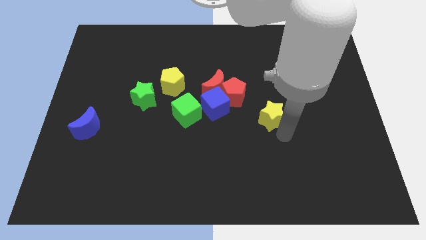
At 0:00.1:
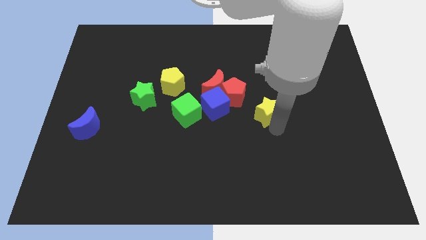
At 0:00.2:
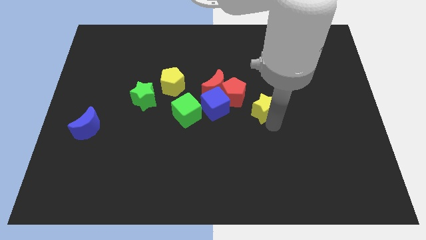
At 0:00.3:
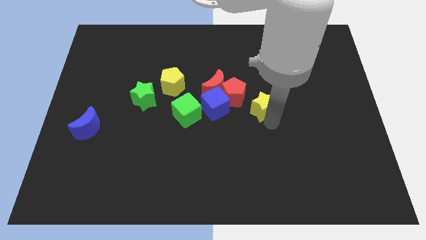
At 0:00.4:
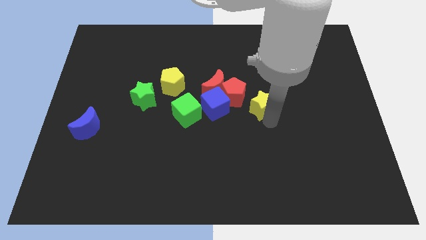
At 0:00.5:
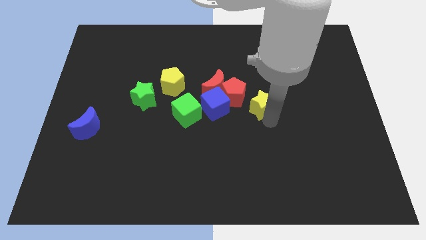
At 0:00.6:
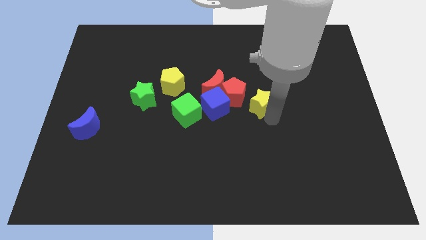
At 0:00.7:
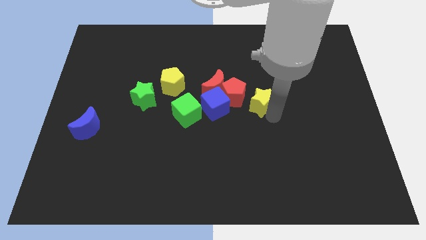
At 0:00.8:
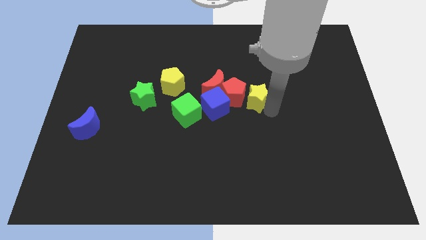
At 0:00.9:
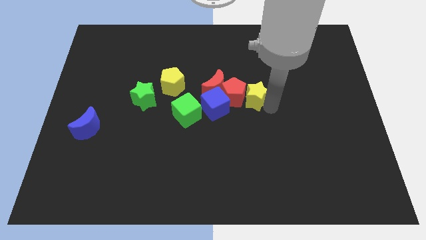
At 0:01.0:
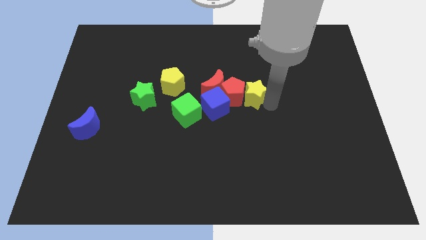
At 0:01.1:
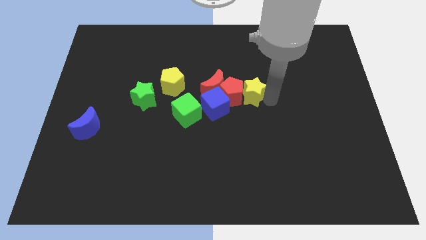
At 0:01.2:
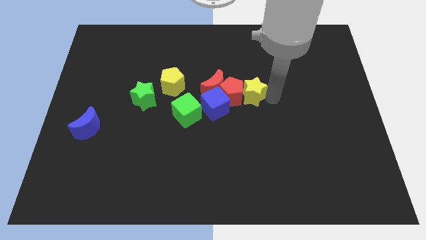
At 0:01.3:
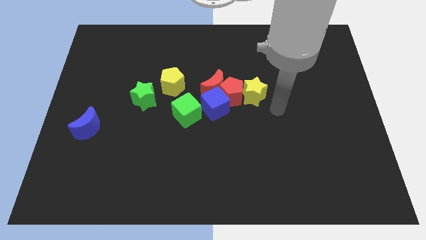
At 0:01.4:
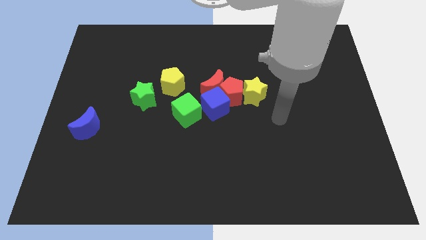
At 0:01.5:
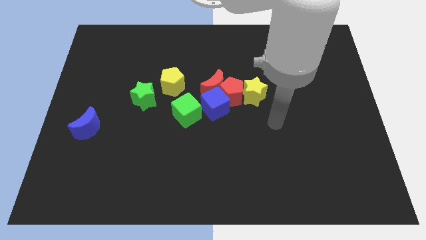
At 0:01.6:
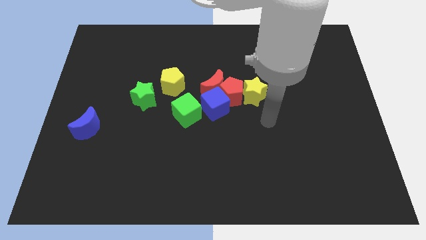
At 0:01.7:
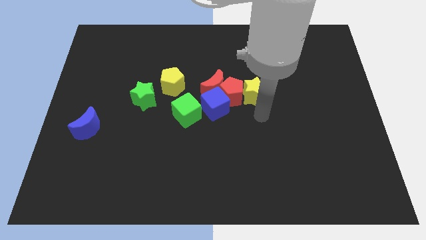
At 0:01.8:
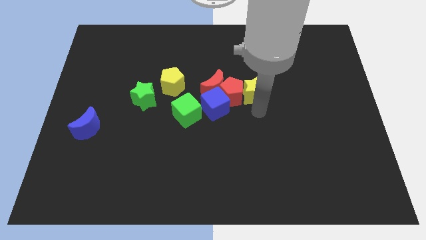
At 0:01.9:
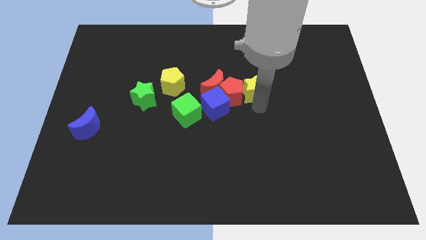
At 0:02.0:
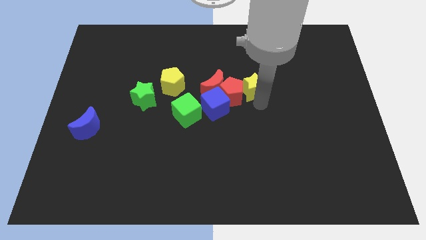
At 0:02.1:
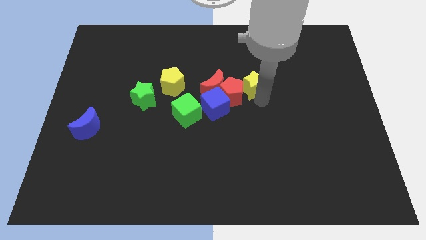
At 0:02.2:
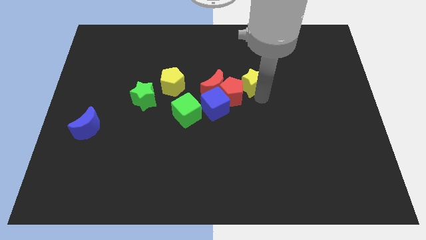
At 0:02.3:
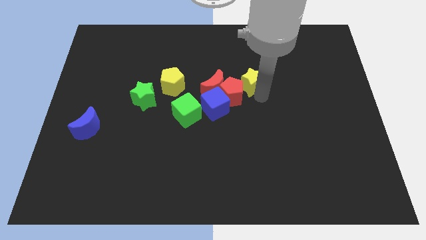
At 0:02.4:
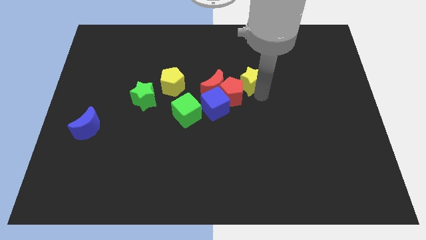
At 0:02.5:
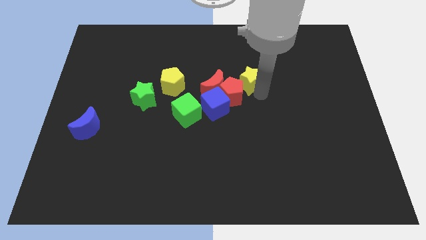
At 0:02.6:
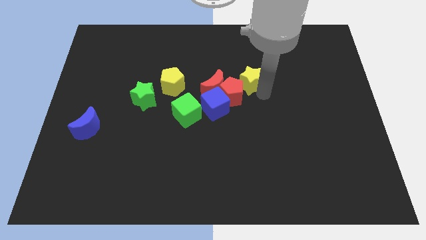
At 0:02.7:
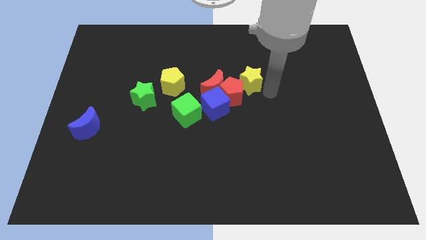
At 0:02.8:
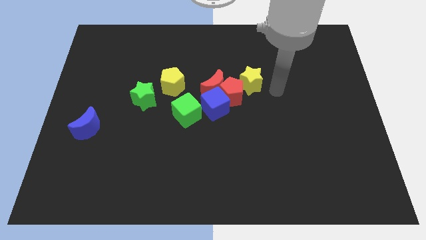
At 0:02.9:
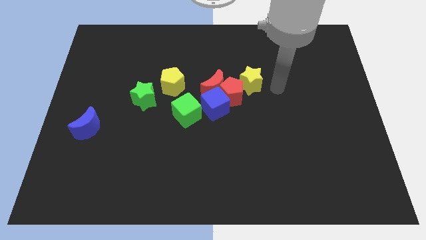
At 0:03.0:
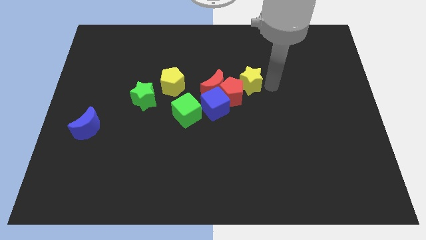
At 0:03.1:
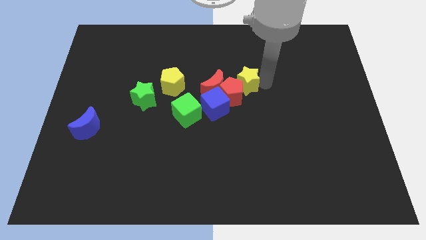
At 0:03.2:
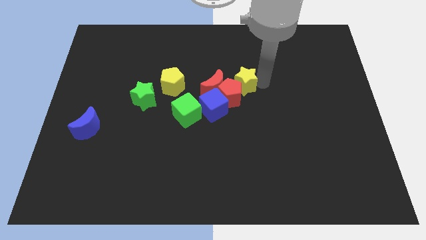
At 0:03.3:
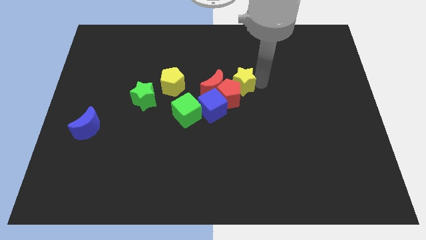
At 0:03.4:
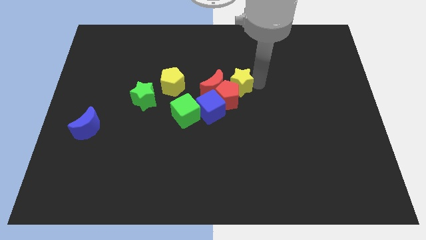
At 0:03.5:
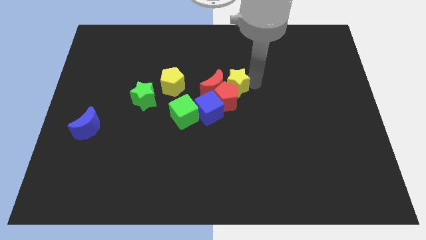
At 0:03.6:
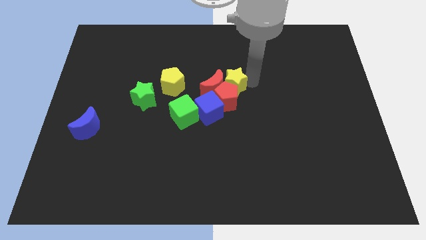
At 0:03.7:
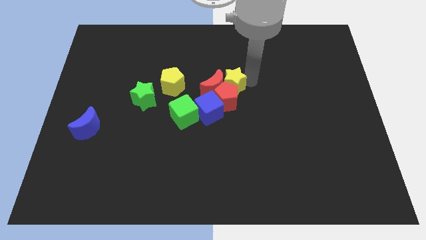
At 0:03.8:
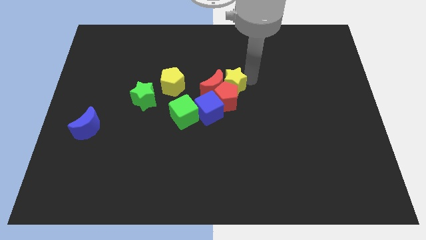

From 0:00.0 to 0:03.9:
move the yellow star towards the top of the red pentagon

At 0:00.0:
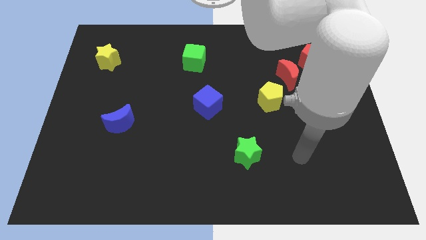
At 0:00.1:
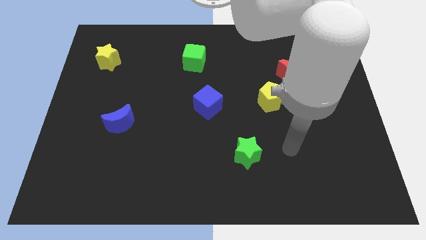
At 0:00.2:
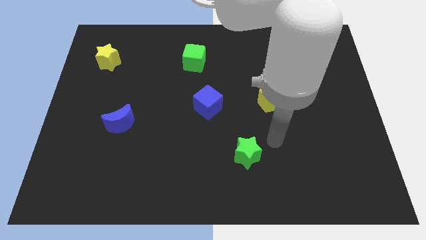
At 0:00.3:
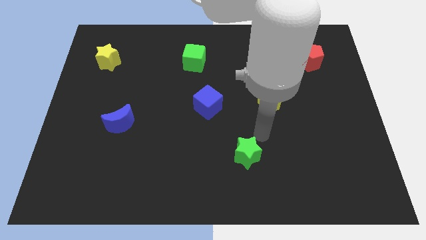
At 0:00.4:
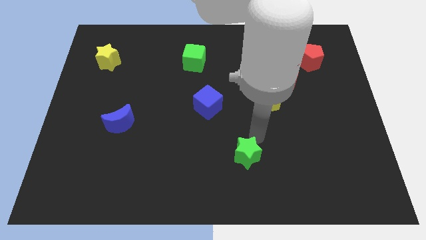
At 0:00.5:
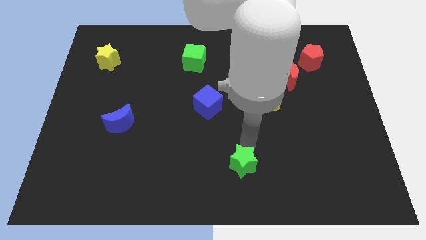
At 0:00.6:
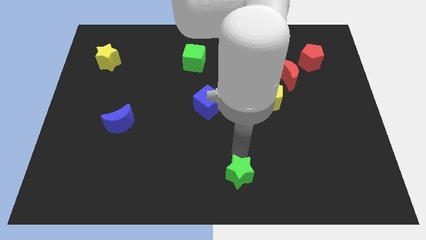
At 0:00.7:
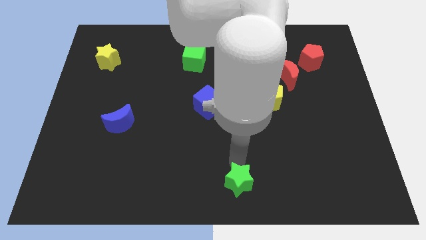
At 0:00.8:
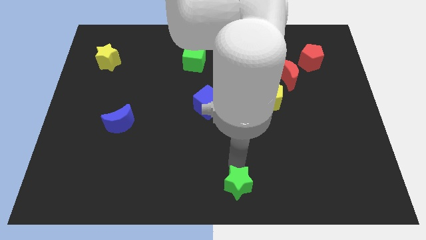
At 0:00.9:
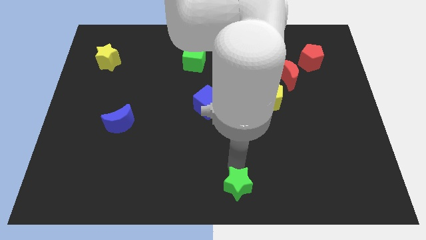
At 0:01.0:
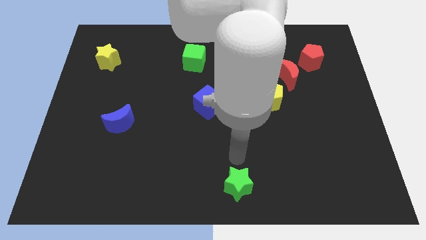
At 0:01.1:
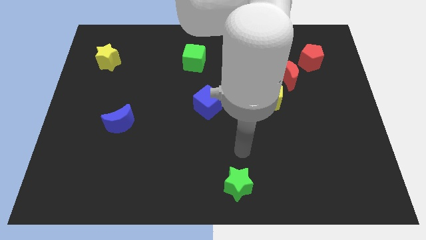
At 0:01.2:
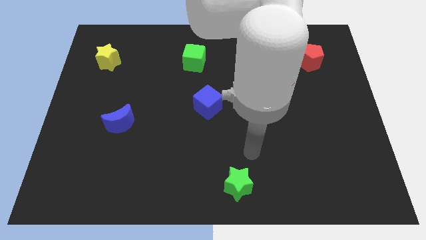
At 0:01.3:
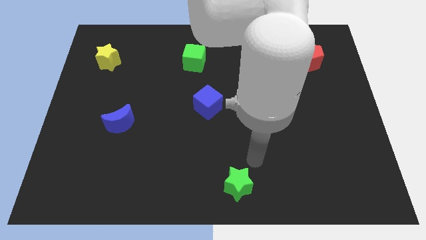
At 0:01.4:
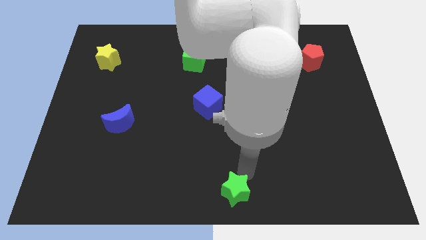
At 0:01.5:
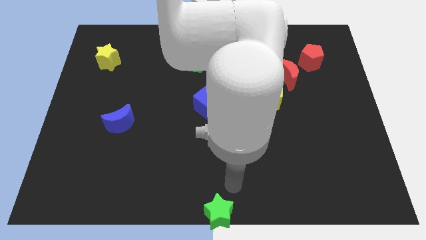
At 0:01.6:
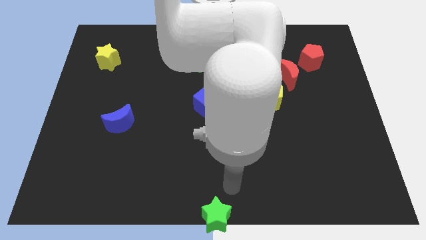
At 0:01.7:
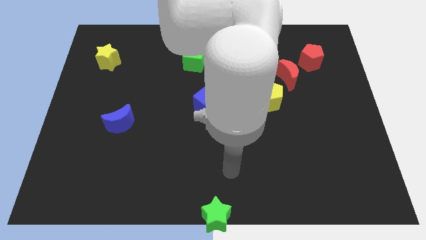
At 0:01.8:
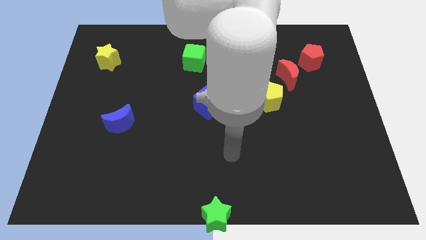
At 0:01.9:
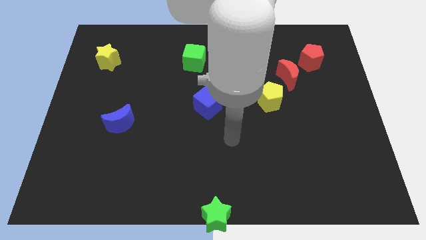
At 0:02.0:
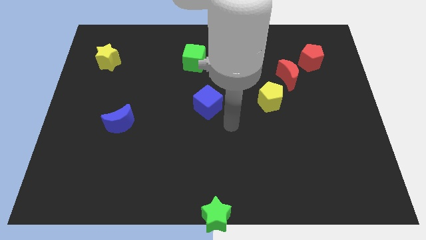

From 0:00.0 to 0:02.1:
place a green star towards the bottom center of the board

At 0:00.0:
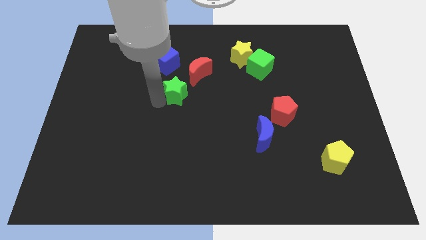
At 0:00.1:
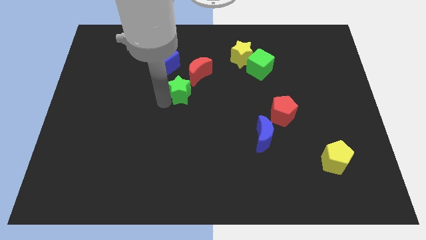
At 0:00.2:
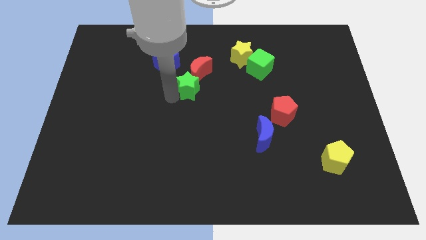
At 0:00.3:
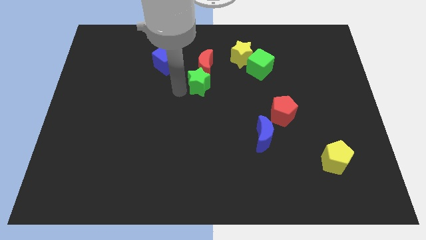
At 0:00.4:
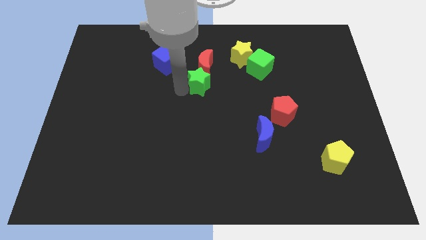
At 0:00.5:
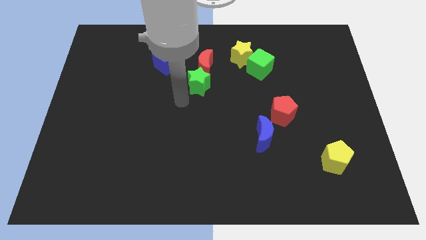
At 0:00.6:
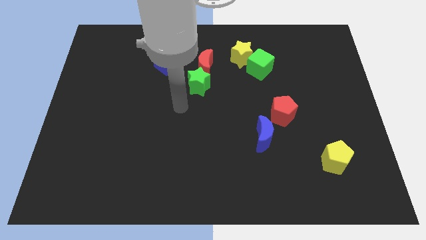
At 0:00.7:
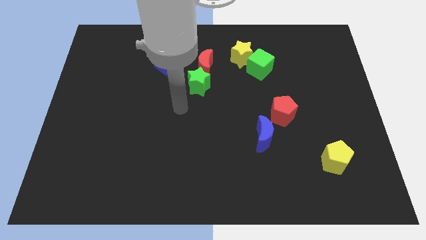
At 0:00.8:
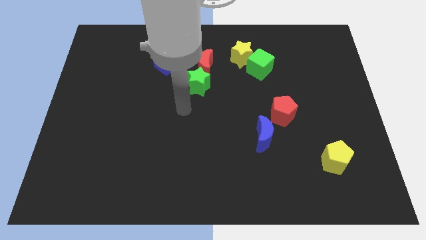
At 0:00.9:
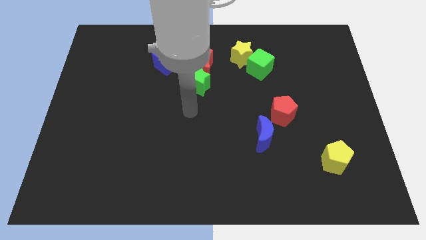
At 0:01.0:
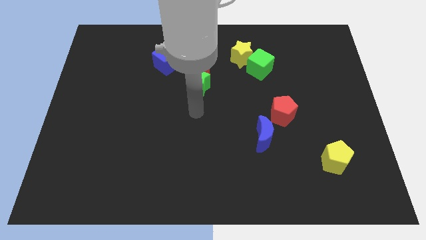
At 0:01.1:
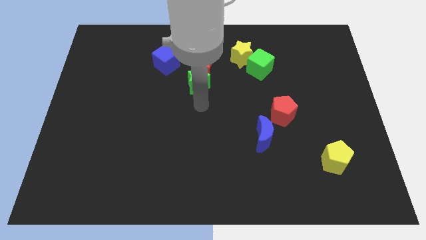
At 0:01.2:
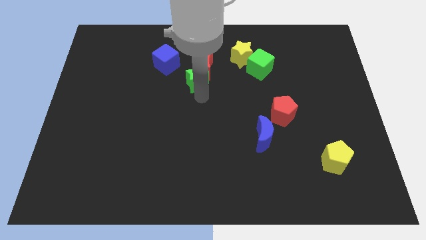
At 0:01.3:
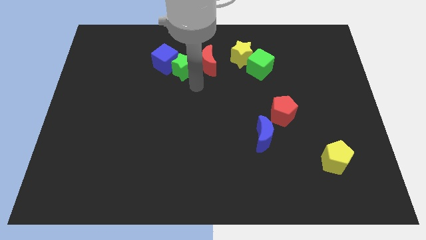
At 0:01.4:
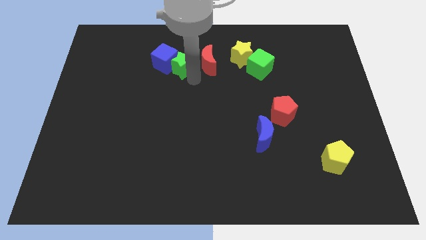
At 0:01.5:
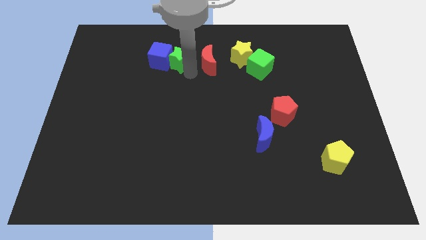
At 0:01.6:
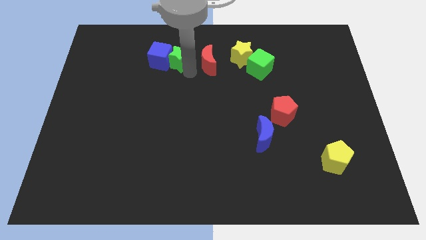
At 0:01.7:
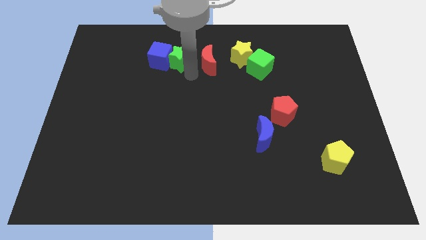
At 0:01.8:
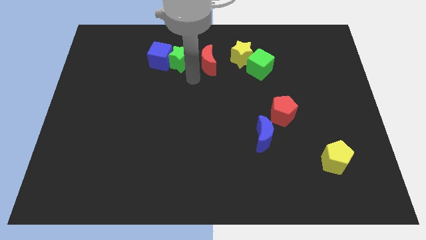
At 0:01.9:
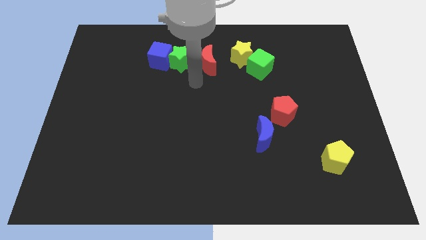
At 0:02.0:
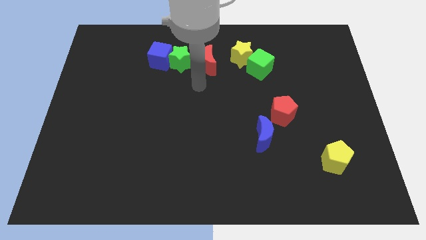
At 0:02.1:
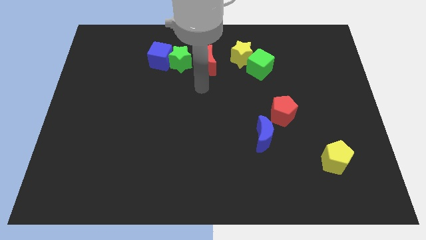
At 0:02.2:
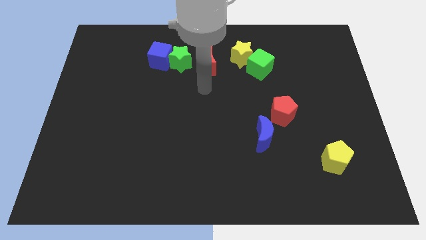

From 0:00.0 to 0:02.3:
place the green star into blue cube to the right

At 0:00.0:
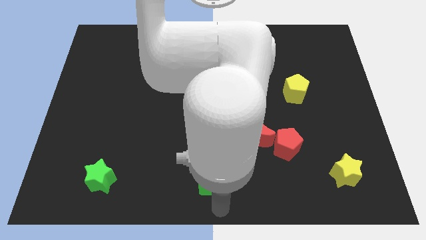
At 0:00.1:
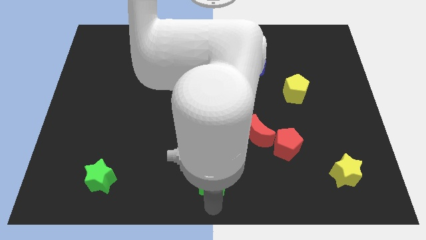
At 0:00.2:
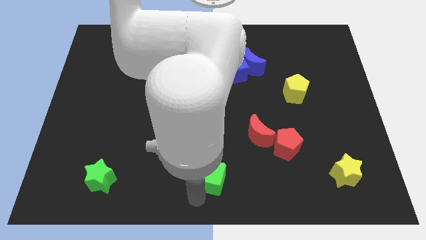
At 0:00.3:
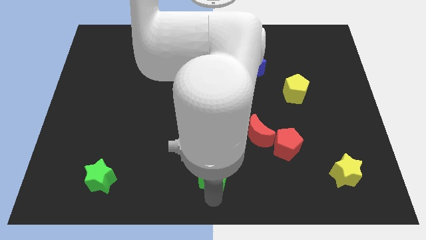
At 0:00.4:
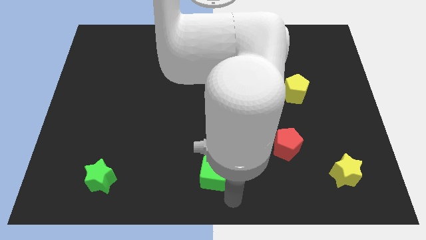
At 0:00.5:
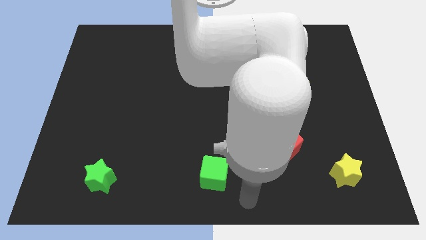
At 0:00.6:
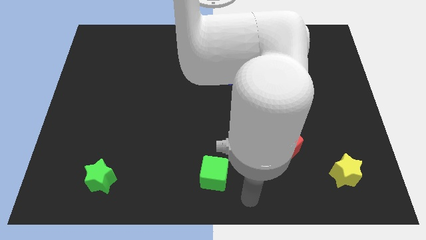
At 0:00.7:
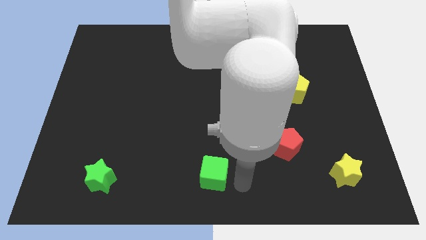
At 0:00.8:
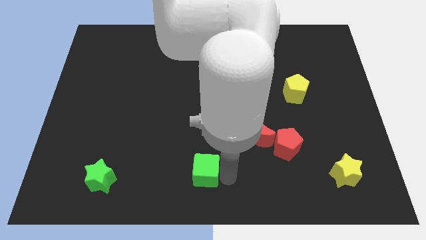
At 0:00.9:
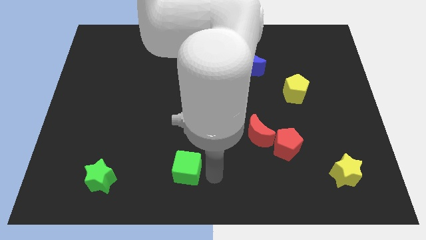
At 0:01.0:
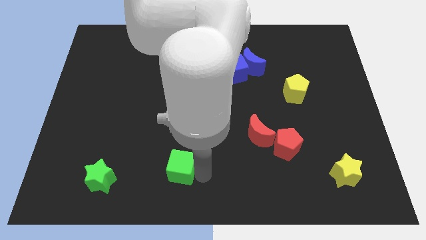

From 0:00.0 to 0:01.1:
push the green cube to the left
